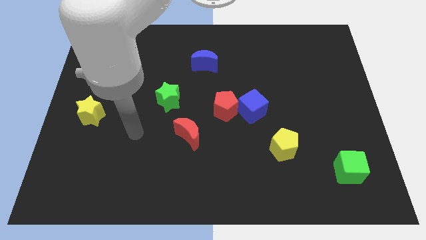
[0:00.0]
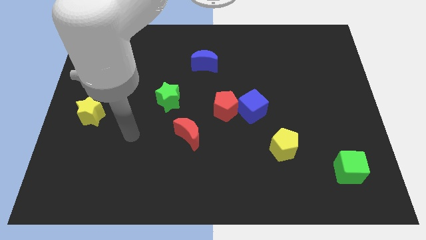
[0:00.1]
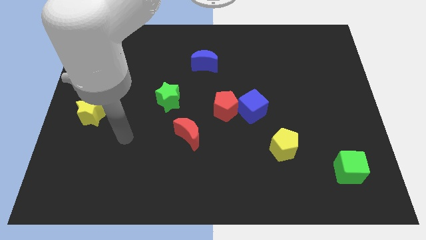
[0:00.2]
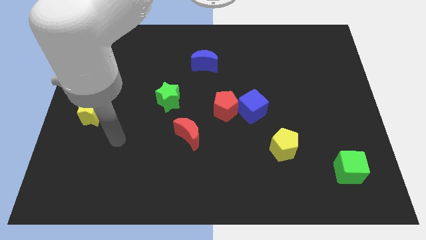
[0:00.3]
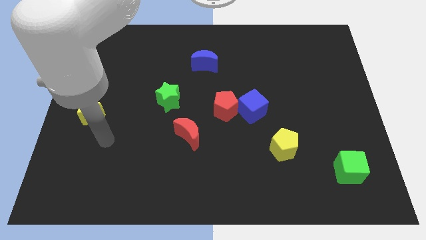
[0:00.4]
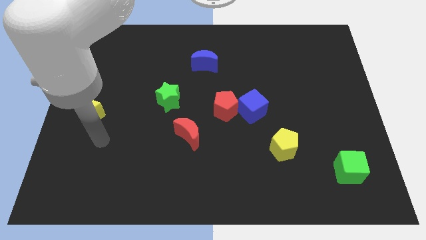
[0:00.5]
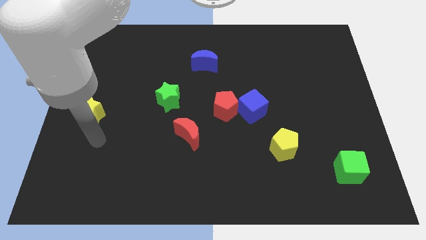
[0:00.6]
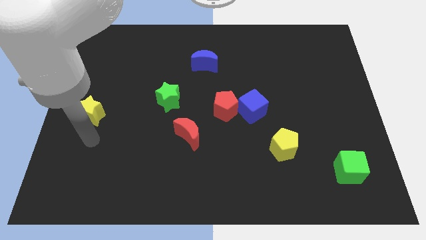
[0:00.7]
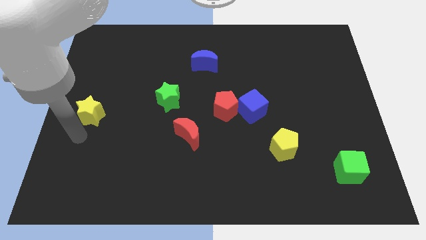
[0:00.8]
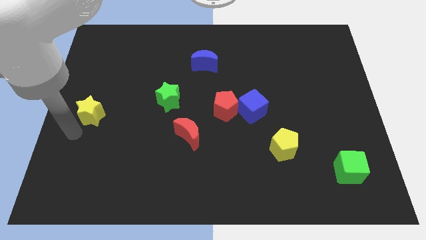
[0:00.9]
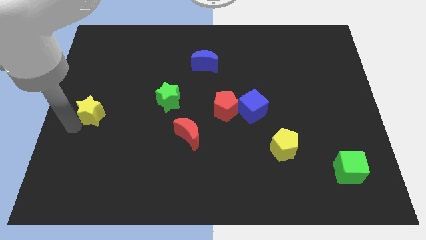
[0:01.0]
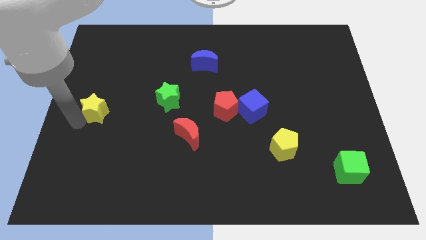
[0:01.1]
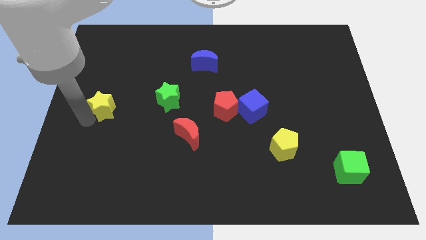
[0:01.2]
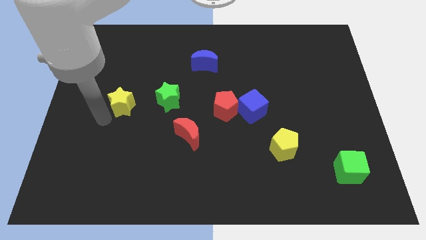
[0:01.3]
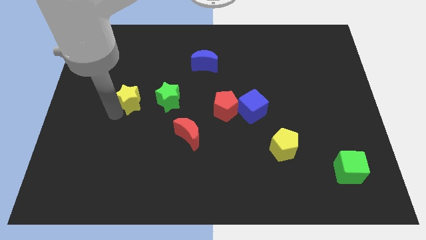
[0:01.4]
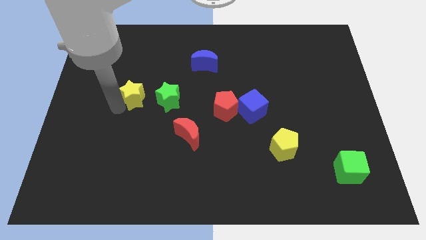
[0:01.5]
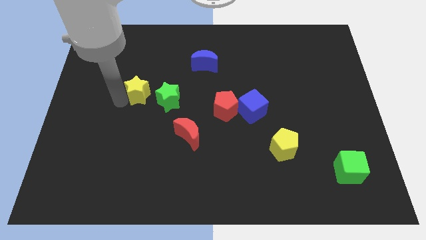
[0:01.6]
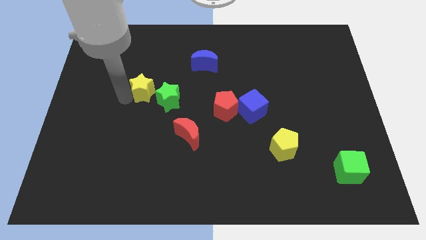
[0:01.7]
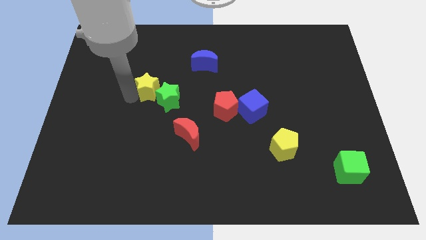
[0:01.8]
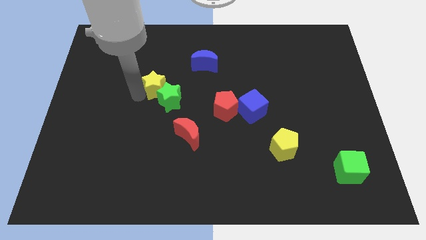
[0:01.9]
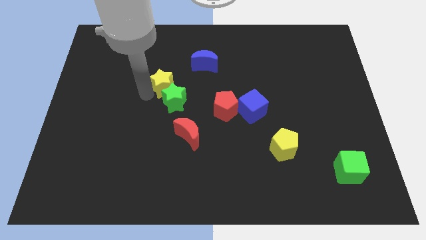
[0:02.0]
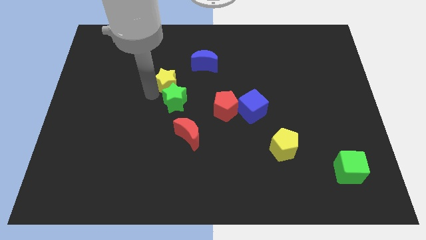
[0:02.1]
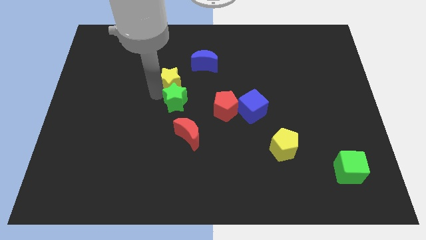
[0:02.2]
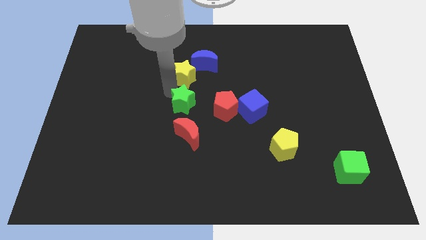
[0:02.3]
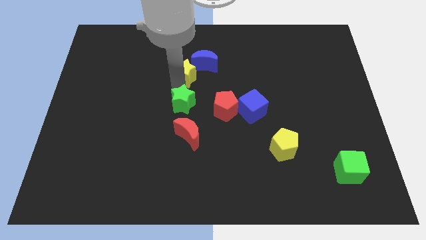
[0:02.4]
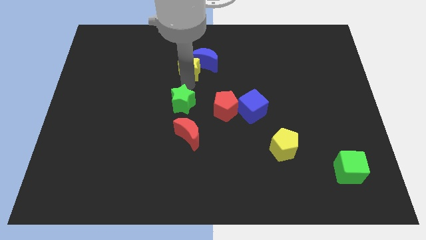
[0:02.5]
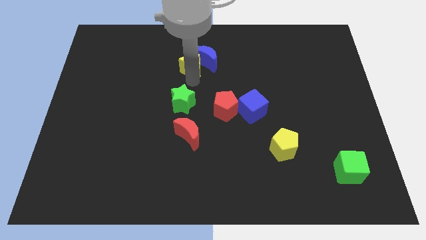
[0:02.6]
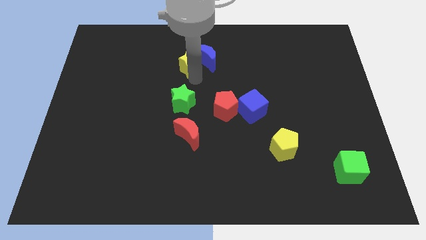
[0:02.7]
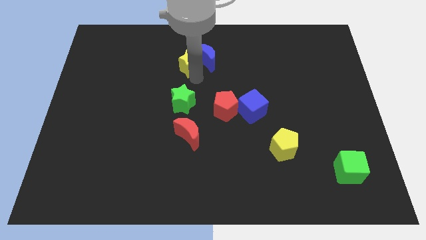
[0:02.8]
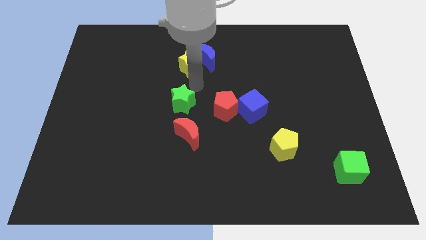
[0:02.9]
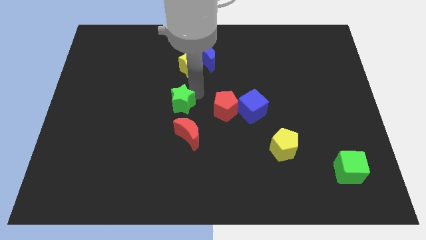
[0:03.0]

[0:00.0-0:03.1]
place the yellow star into blue moon diagonal left

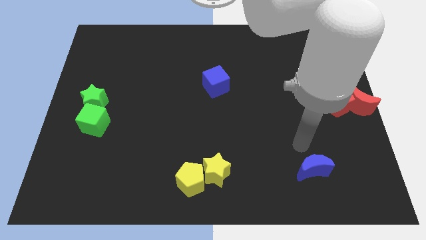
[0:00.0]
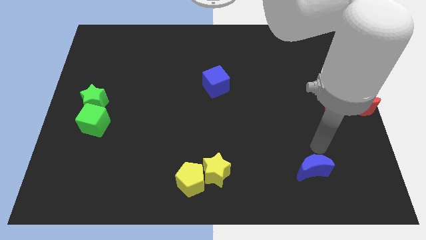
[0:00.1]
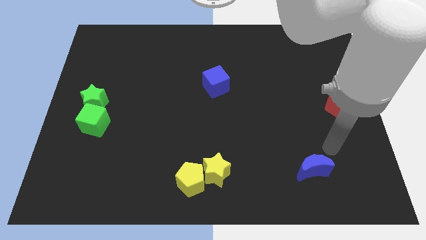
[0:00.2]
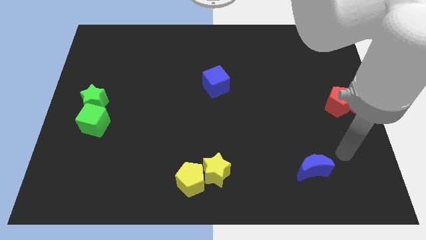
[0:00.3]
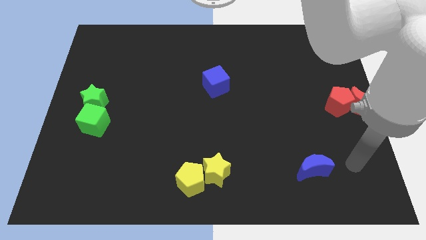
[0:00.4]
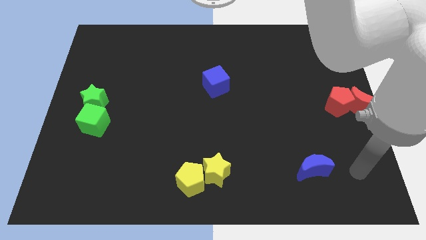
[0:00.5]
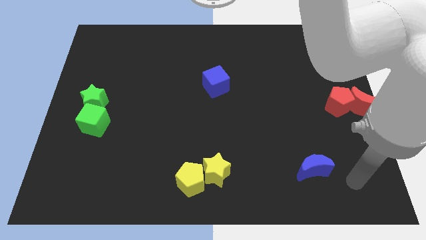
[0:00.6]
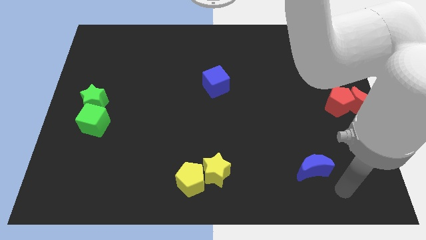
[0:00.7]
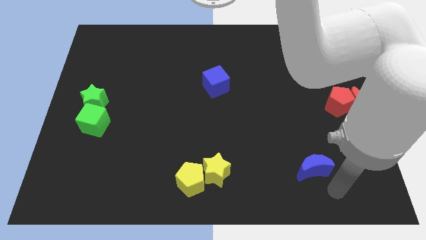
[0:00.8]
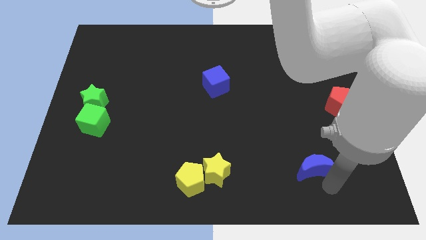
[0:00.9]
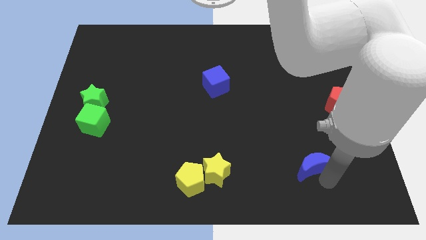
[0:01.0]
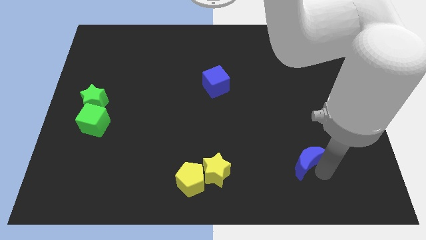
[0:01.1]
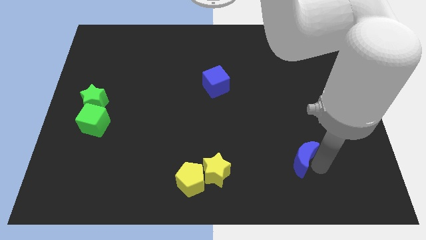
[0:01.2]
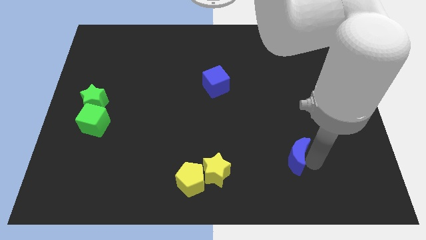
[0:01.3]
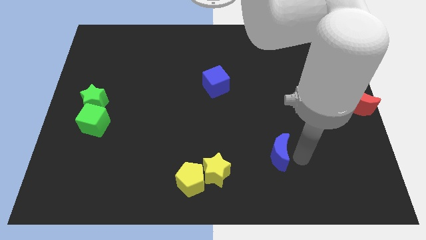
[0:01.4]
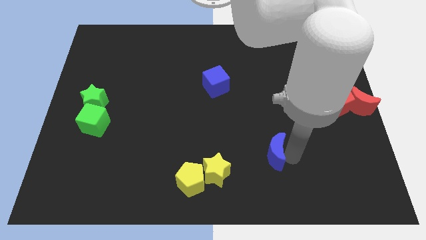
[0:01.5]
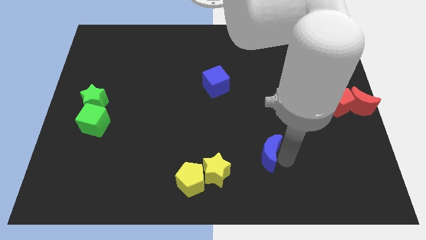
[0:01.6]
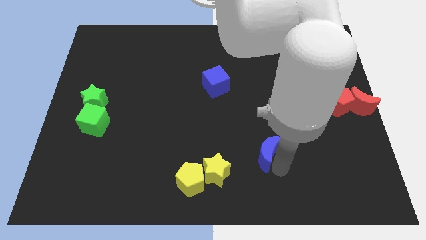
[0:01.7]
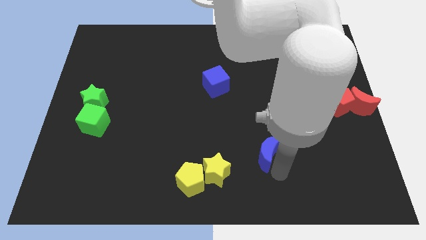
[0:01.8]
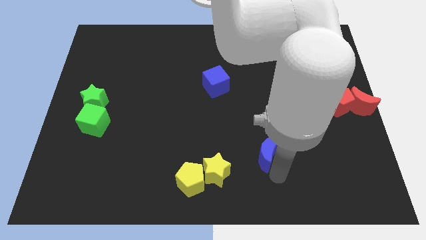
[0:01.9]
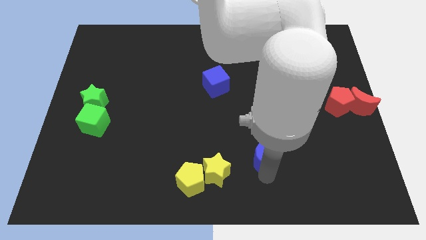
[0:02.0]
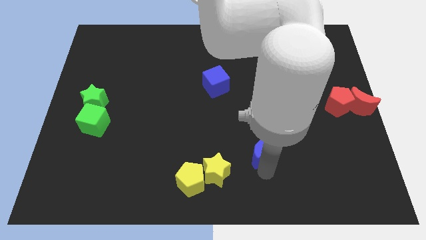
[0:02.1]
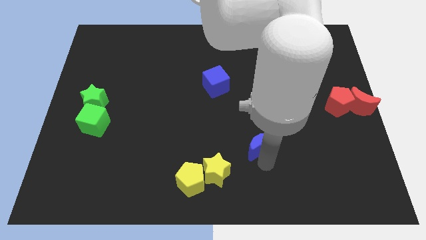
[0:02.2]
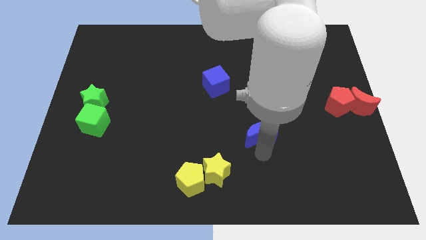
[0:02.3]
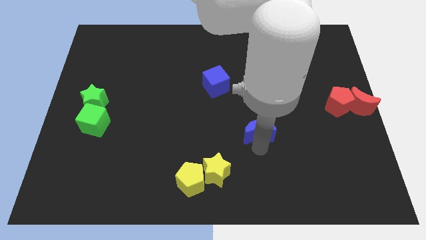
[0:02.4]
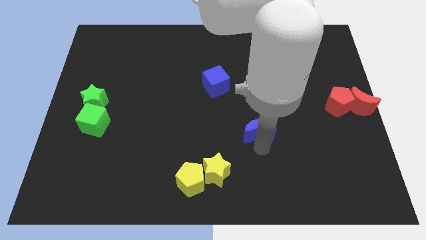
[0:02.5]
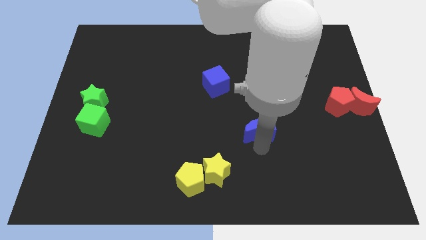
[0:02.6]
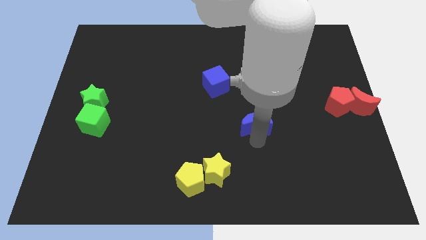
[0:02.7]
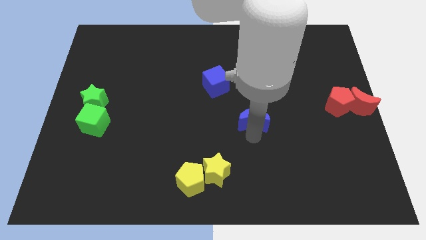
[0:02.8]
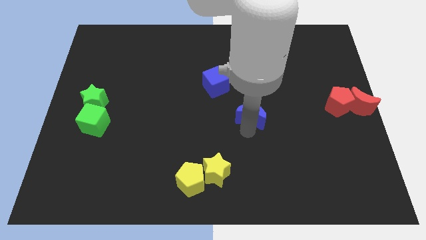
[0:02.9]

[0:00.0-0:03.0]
move the blue moon towards the blue cube

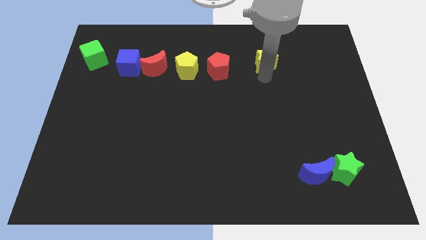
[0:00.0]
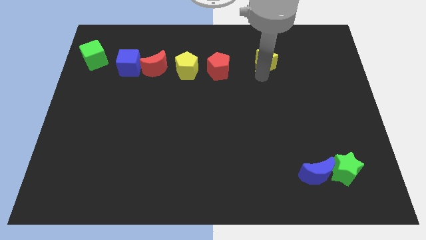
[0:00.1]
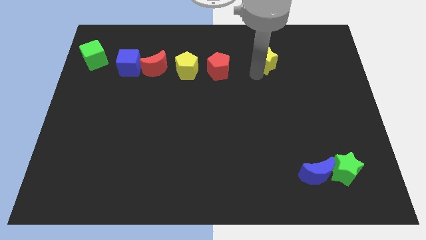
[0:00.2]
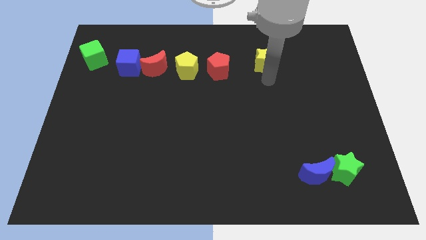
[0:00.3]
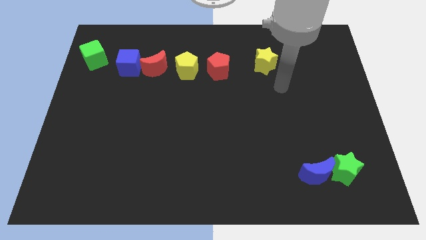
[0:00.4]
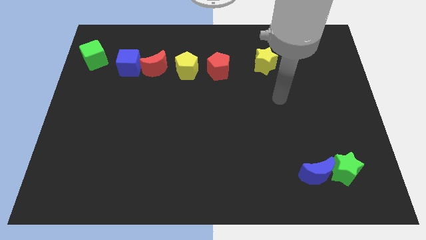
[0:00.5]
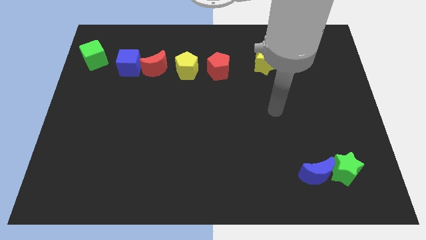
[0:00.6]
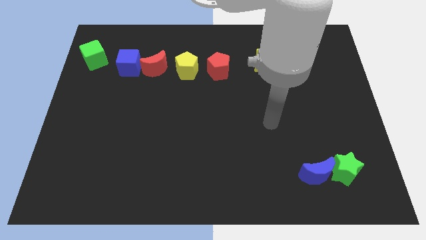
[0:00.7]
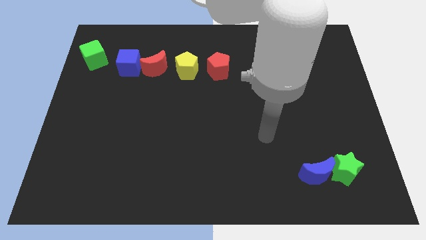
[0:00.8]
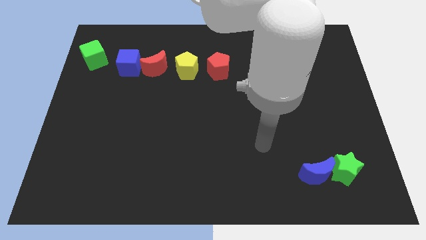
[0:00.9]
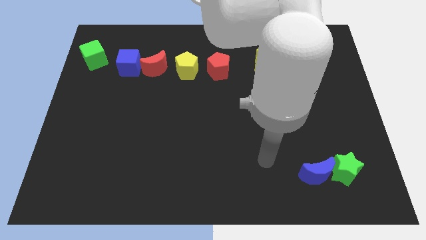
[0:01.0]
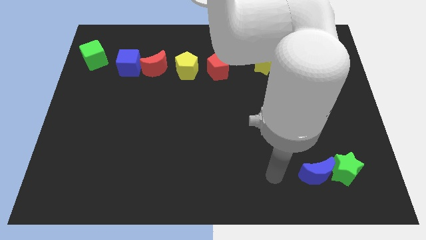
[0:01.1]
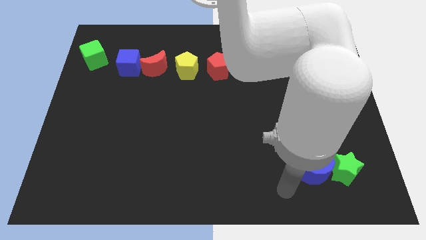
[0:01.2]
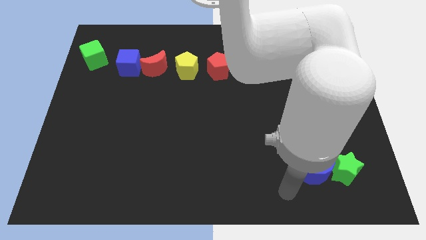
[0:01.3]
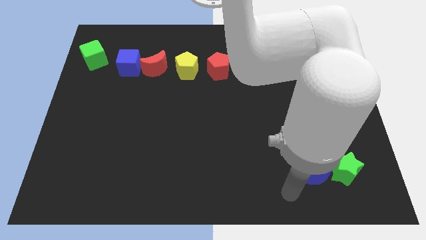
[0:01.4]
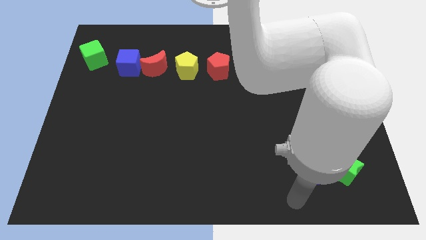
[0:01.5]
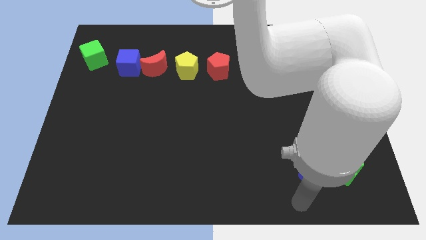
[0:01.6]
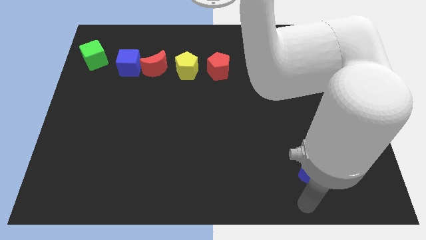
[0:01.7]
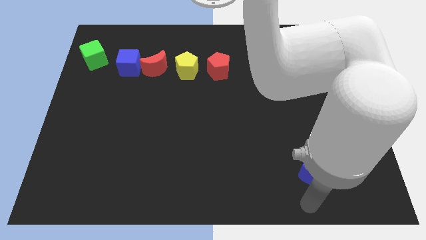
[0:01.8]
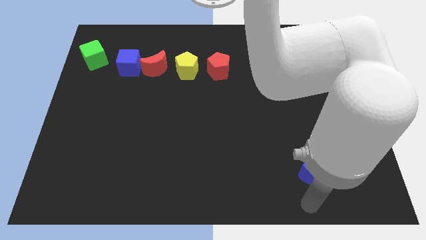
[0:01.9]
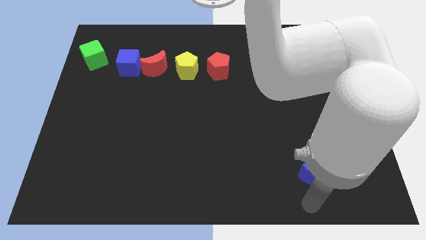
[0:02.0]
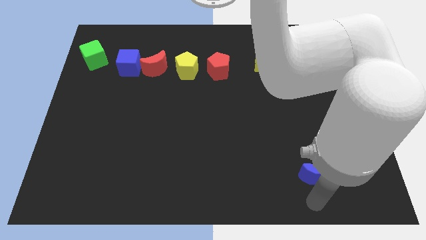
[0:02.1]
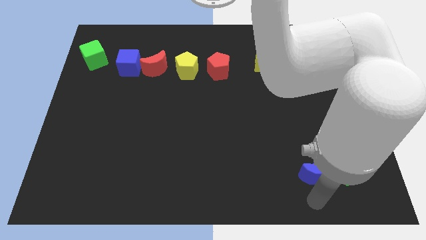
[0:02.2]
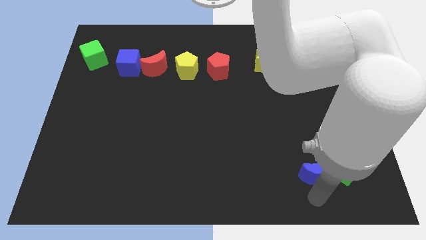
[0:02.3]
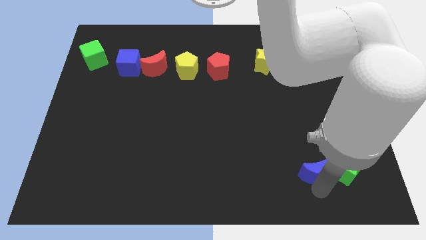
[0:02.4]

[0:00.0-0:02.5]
move your arm to the bottom of blue moon

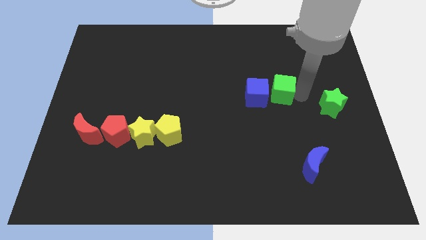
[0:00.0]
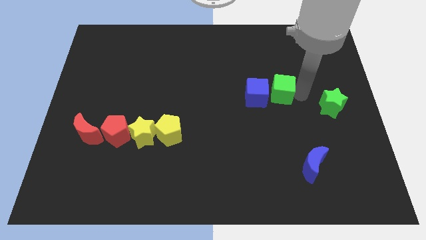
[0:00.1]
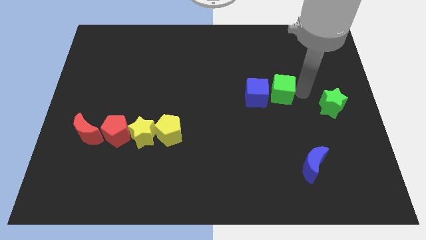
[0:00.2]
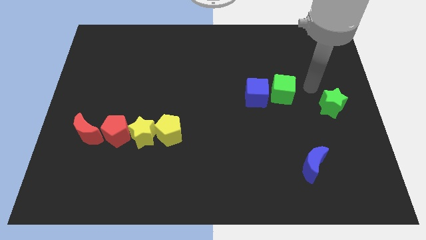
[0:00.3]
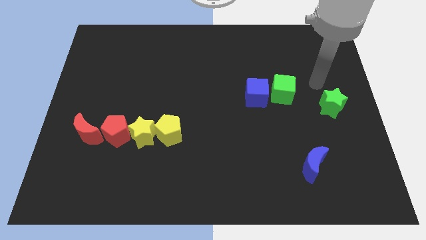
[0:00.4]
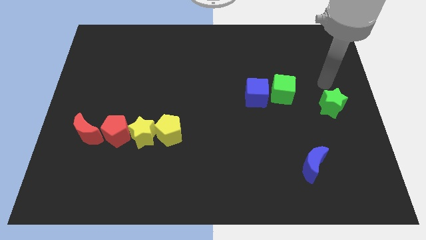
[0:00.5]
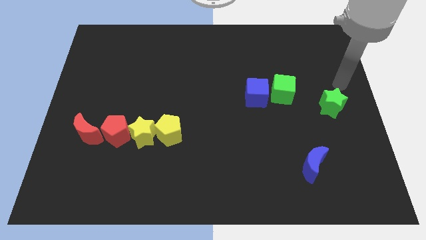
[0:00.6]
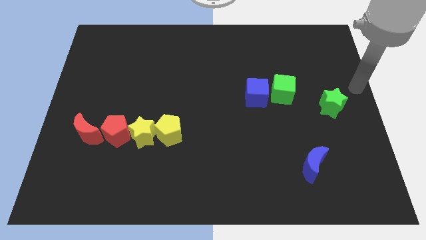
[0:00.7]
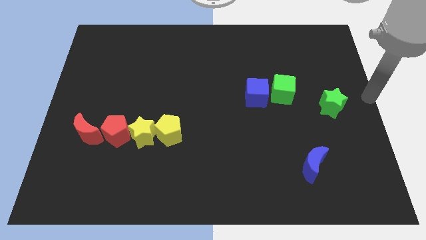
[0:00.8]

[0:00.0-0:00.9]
place arm on center right of board
